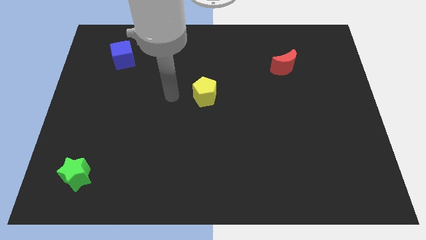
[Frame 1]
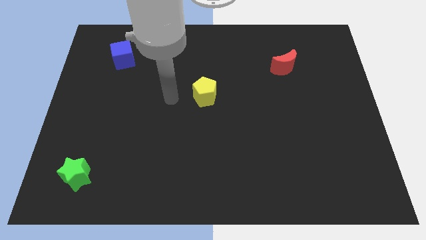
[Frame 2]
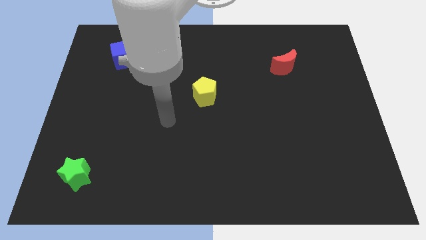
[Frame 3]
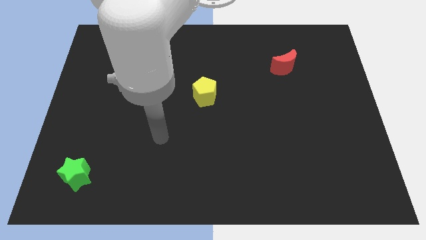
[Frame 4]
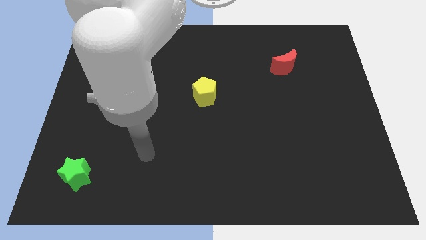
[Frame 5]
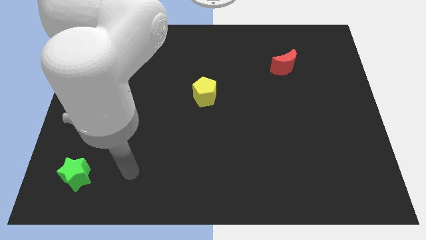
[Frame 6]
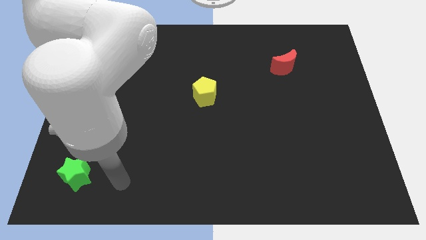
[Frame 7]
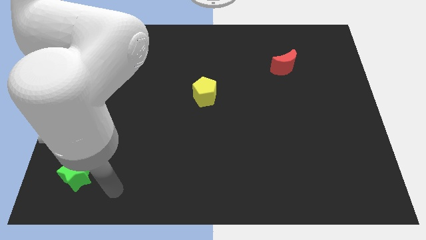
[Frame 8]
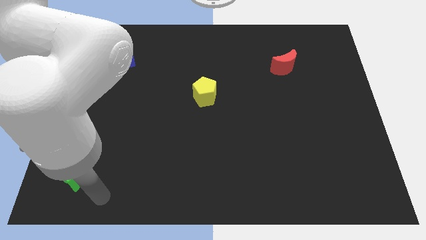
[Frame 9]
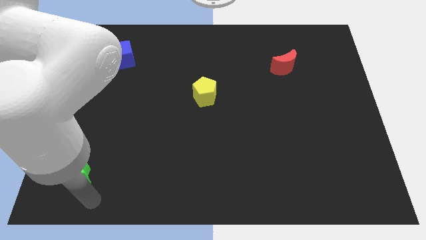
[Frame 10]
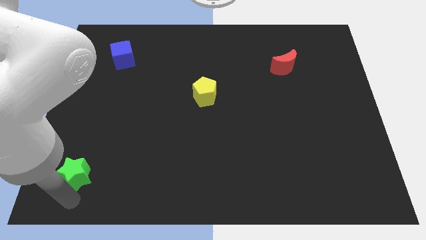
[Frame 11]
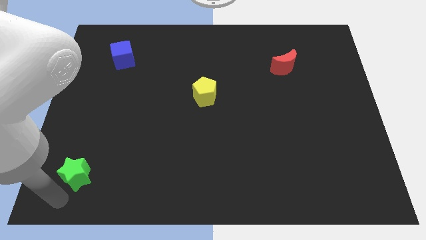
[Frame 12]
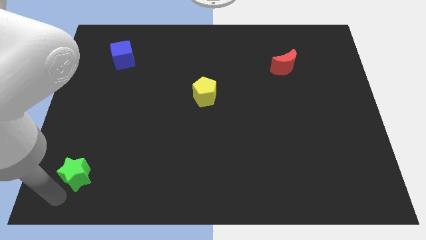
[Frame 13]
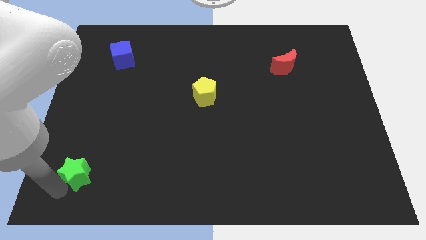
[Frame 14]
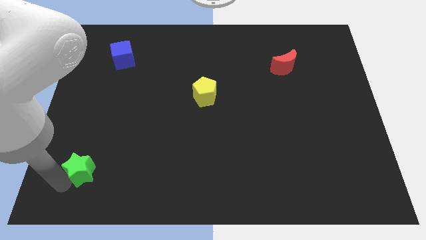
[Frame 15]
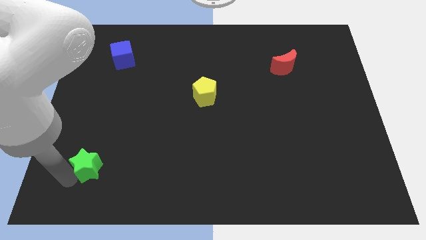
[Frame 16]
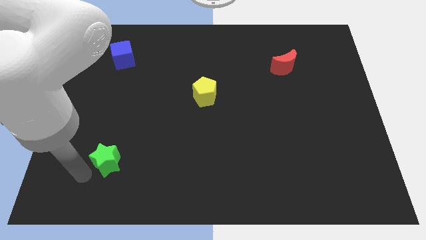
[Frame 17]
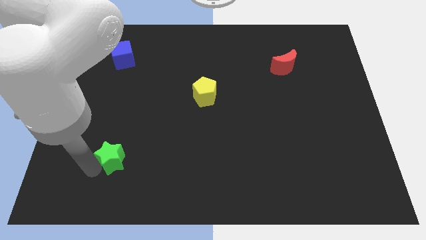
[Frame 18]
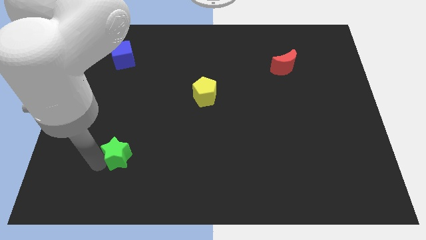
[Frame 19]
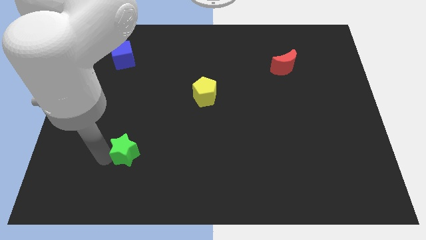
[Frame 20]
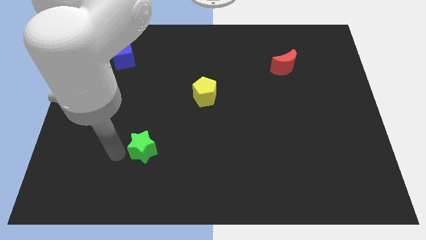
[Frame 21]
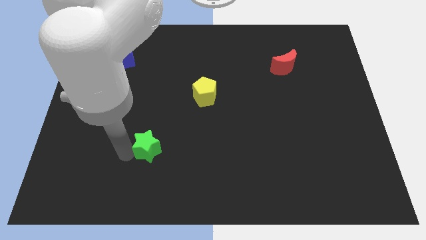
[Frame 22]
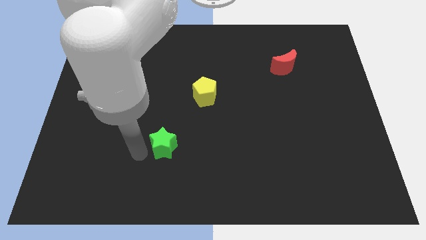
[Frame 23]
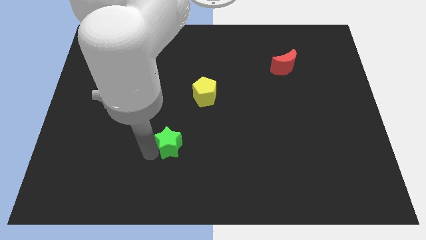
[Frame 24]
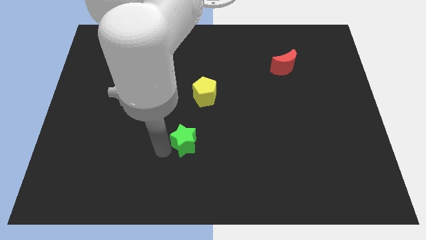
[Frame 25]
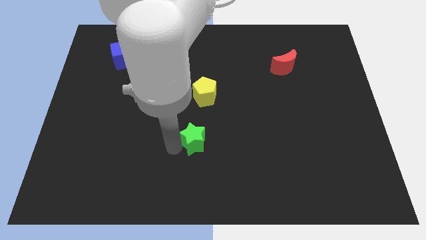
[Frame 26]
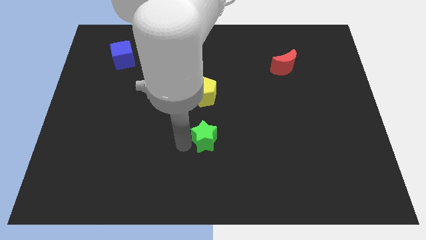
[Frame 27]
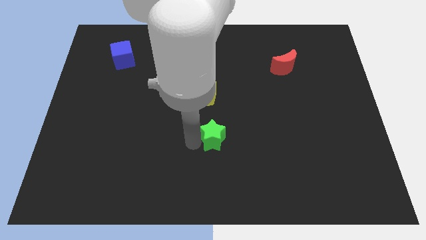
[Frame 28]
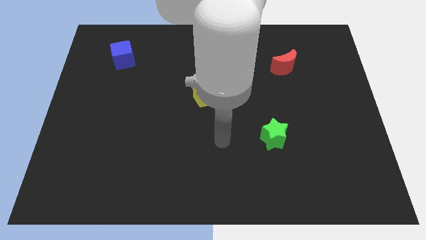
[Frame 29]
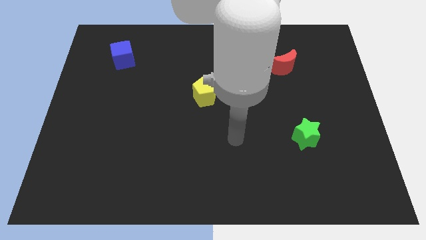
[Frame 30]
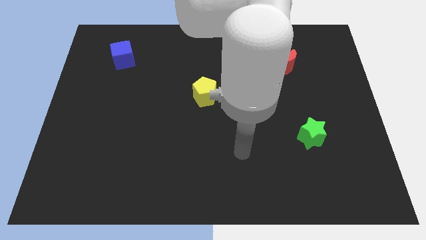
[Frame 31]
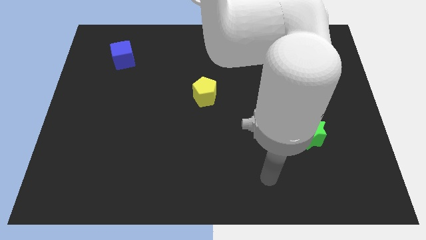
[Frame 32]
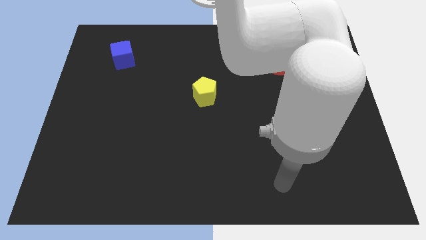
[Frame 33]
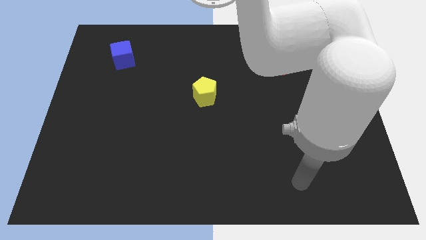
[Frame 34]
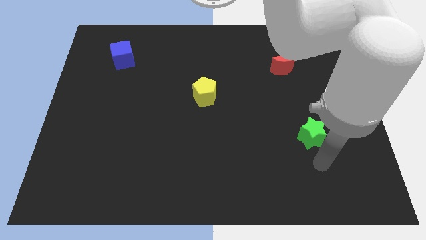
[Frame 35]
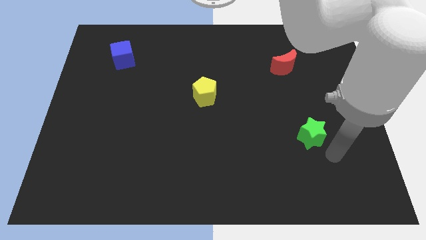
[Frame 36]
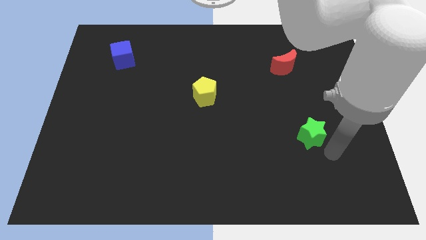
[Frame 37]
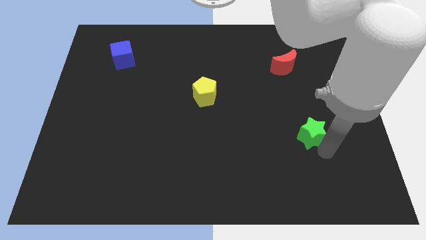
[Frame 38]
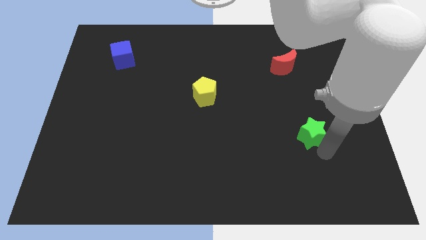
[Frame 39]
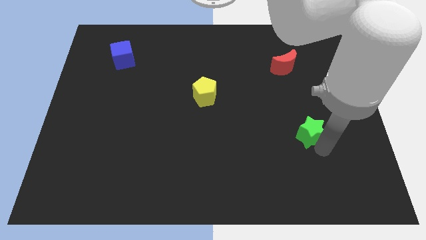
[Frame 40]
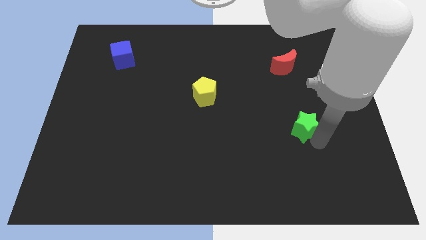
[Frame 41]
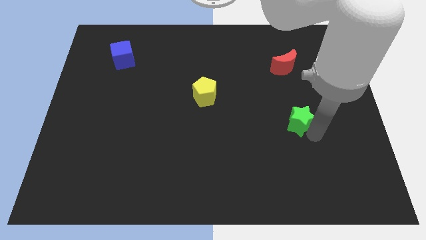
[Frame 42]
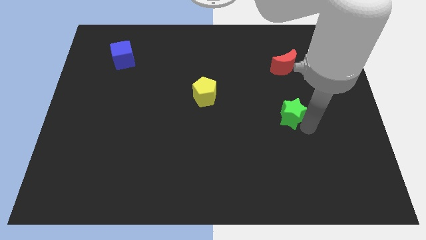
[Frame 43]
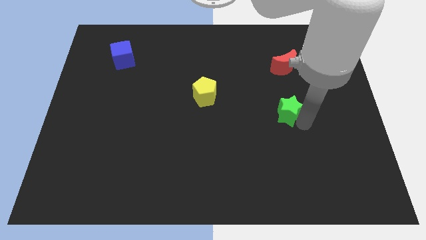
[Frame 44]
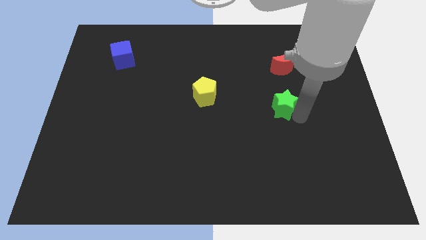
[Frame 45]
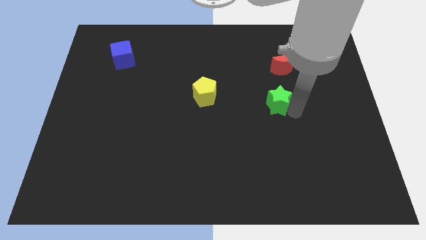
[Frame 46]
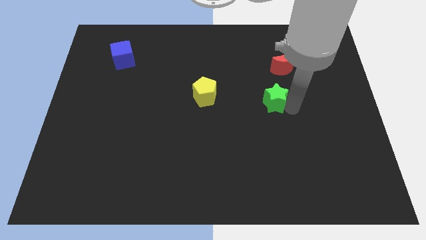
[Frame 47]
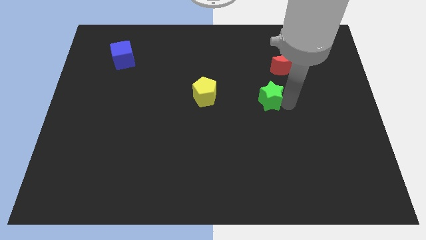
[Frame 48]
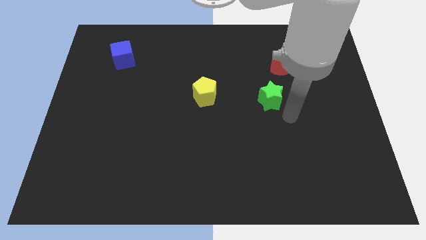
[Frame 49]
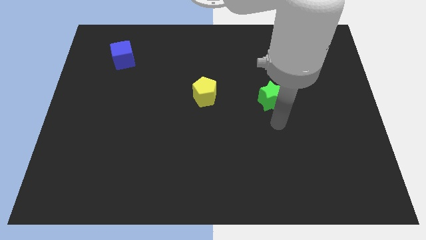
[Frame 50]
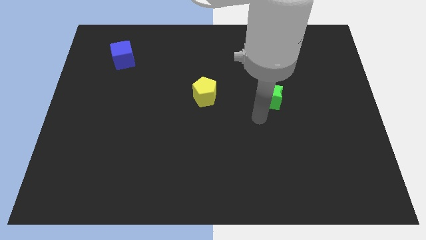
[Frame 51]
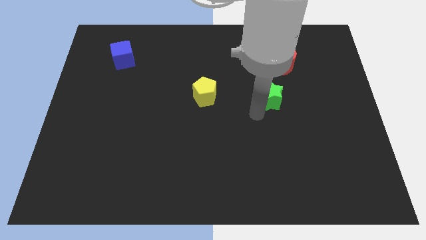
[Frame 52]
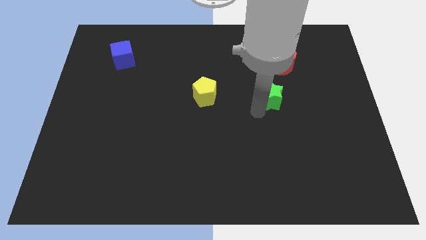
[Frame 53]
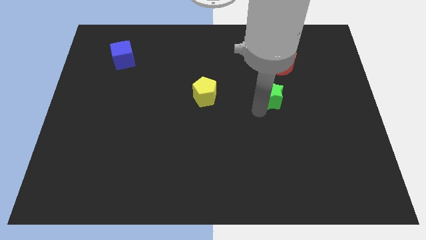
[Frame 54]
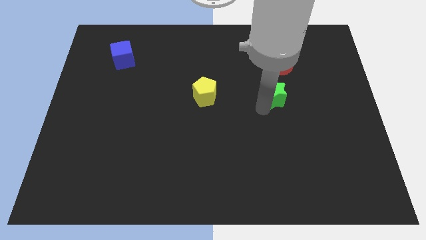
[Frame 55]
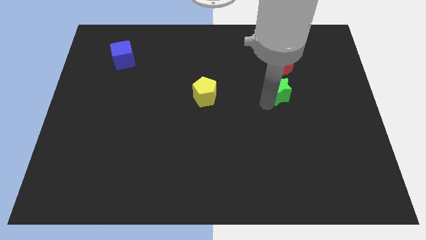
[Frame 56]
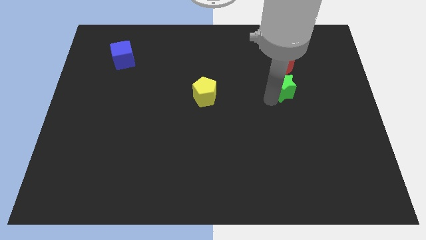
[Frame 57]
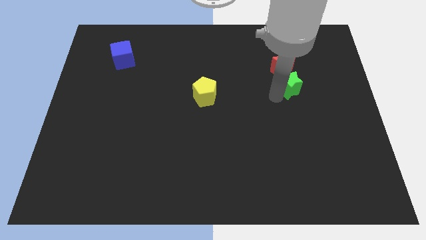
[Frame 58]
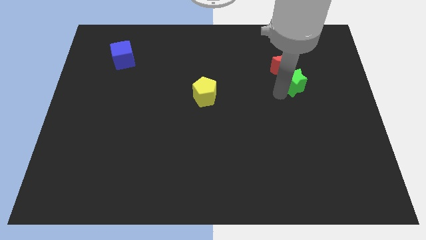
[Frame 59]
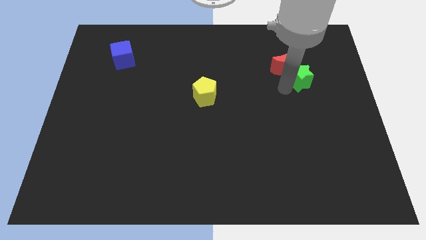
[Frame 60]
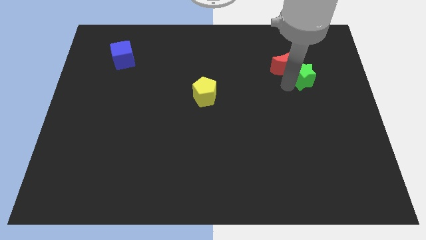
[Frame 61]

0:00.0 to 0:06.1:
put the green block to the red block

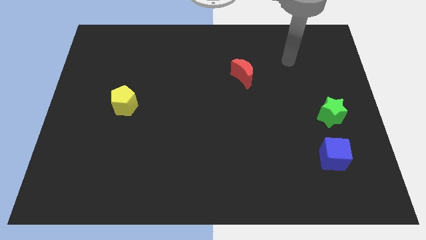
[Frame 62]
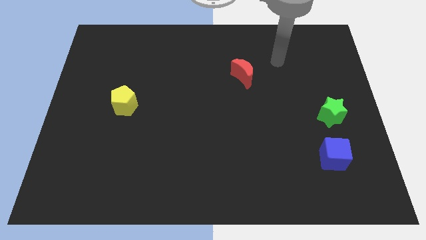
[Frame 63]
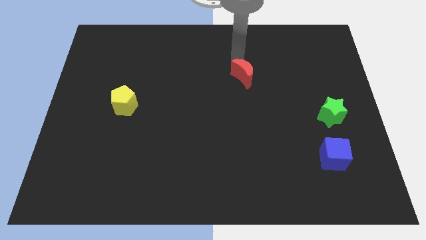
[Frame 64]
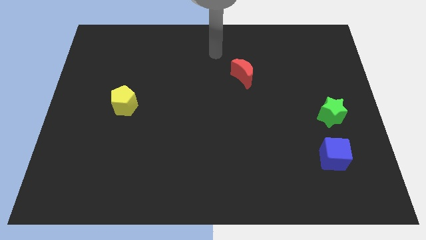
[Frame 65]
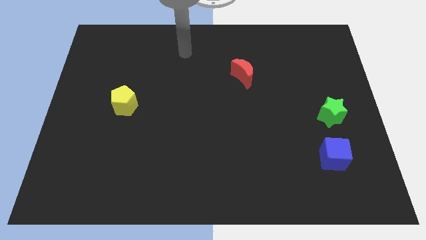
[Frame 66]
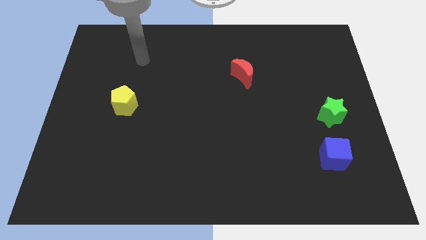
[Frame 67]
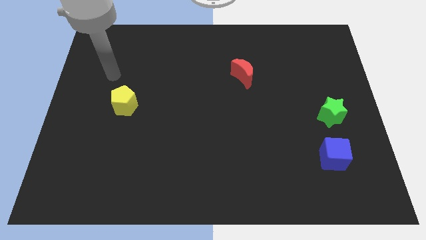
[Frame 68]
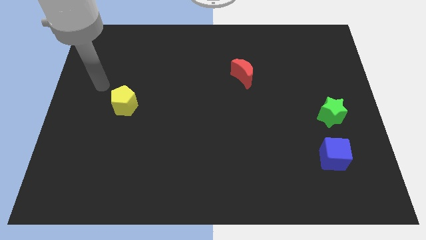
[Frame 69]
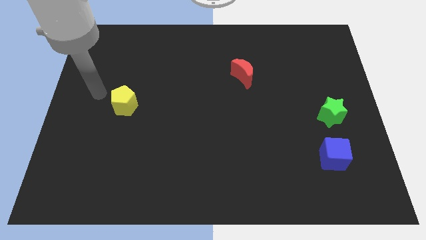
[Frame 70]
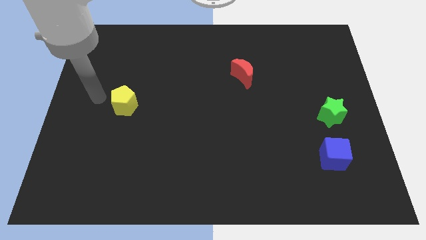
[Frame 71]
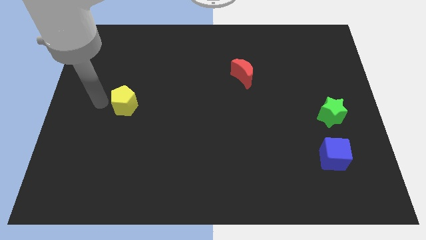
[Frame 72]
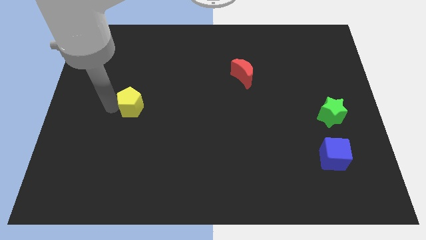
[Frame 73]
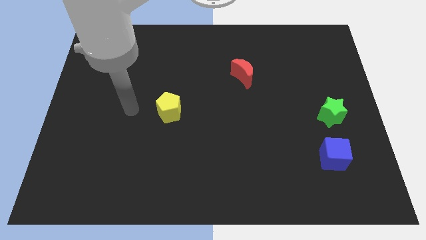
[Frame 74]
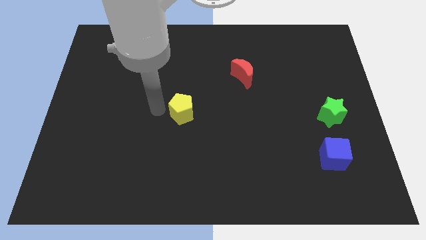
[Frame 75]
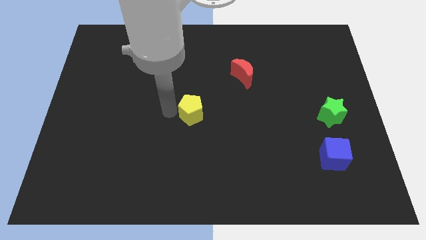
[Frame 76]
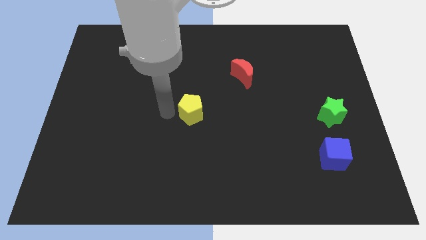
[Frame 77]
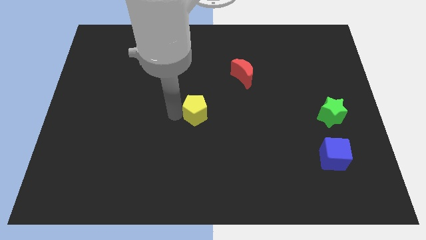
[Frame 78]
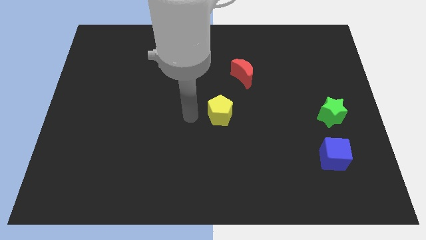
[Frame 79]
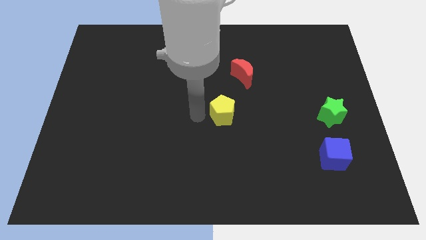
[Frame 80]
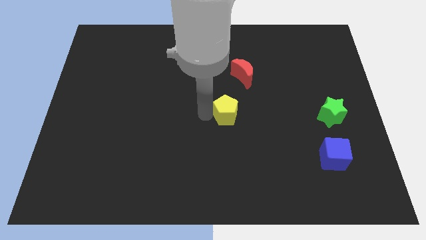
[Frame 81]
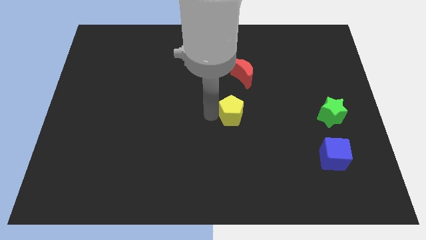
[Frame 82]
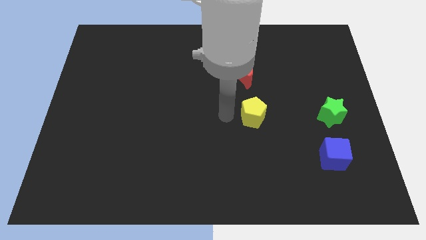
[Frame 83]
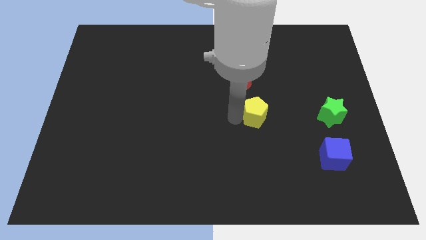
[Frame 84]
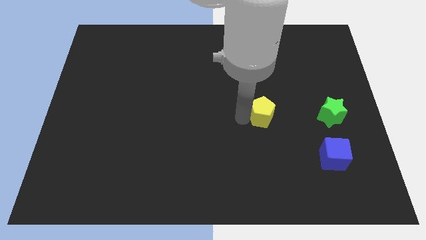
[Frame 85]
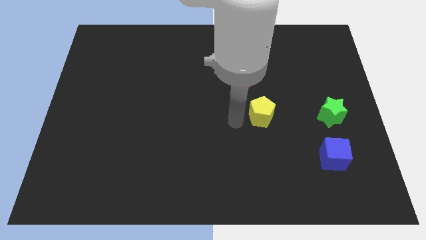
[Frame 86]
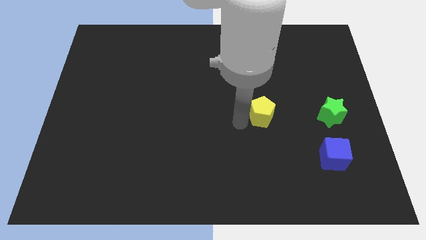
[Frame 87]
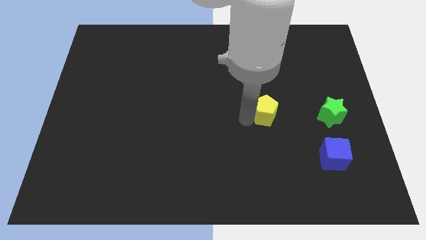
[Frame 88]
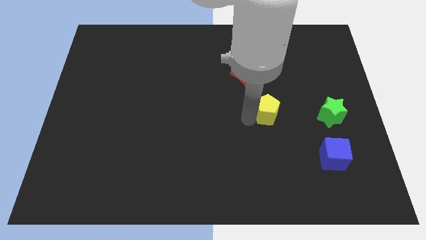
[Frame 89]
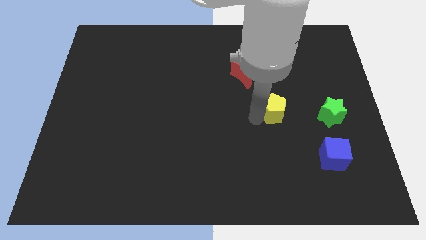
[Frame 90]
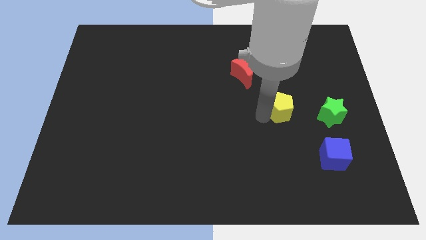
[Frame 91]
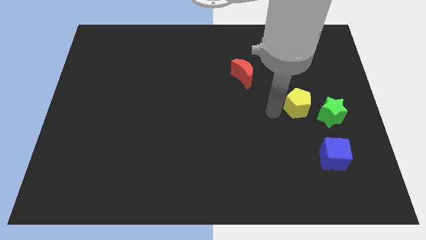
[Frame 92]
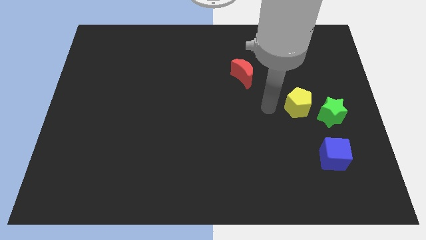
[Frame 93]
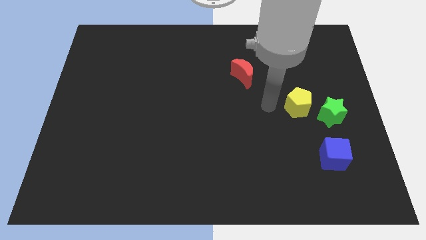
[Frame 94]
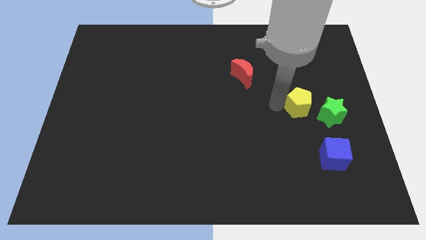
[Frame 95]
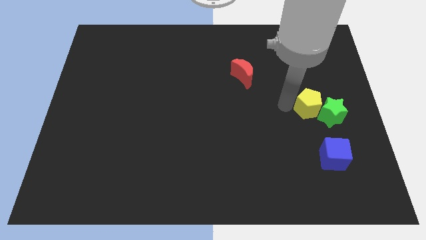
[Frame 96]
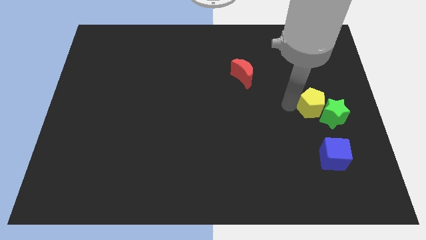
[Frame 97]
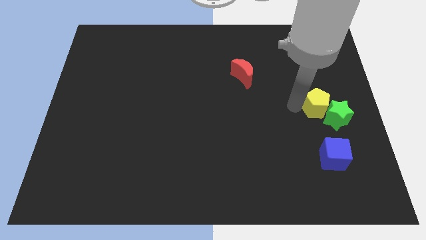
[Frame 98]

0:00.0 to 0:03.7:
push the pentagon next to the green star
